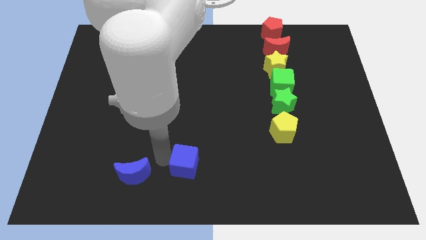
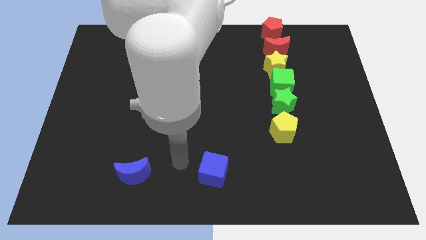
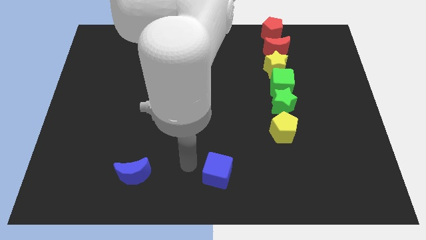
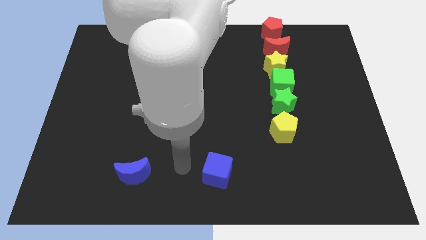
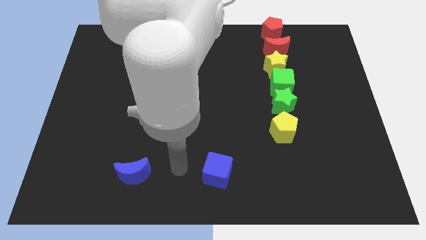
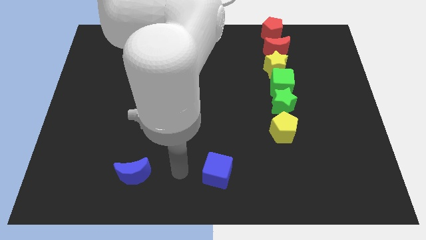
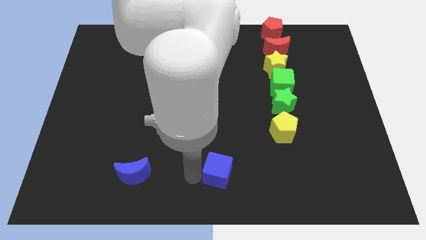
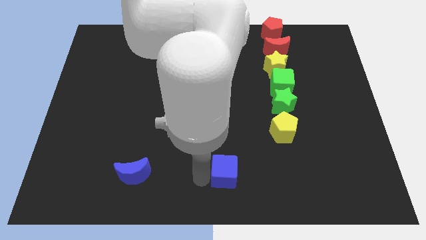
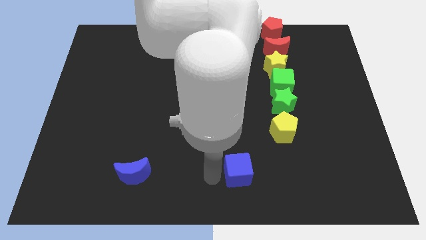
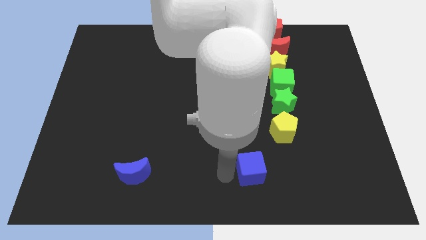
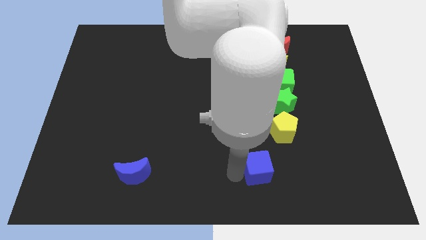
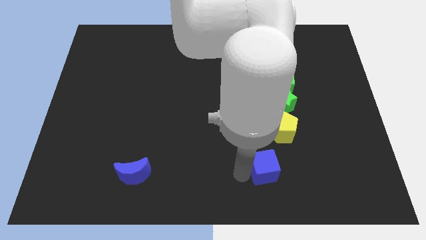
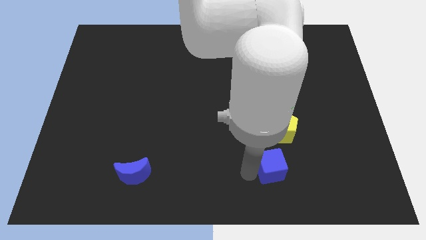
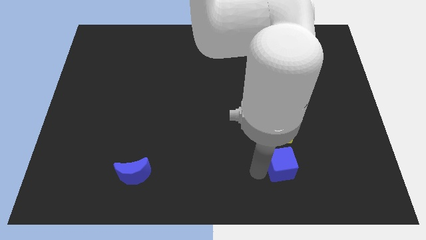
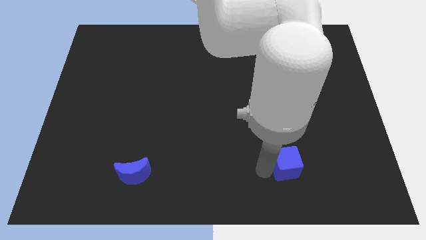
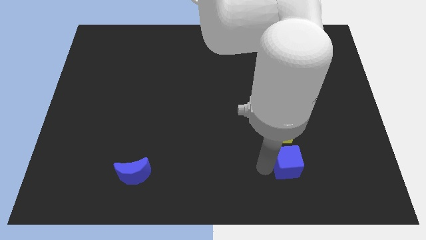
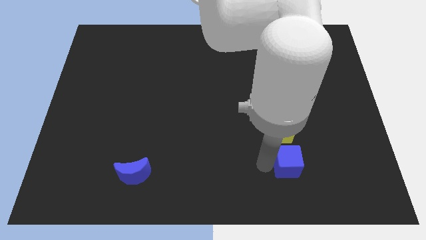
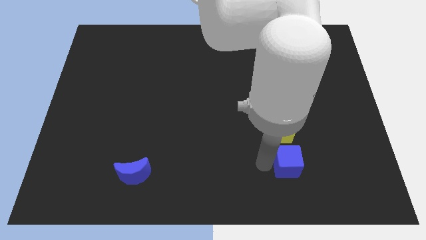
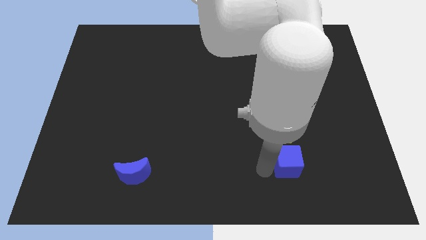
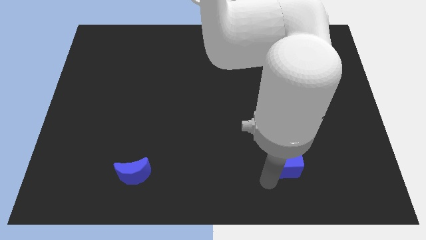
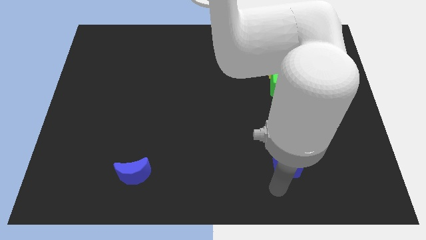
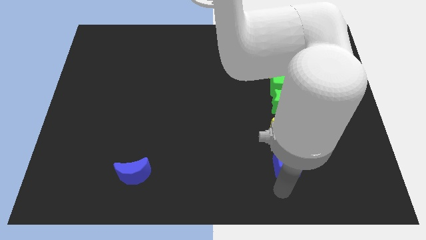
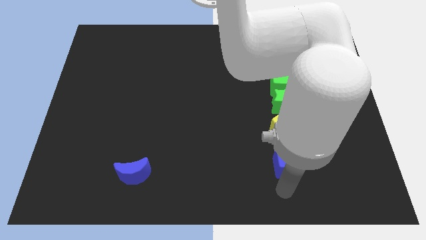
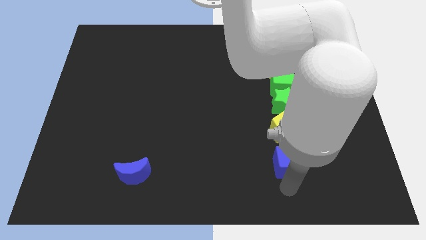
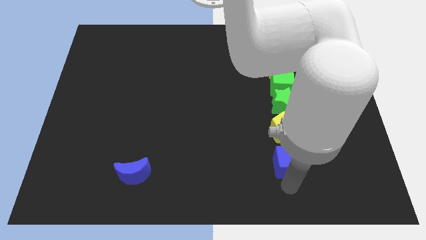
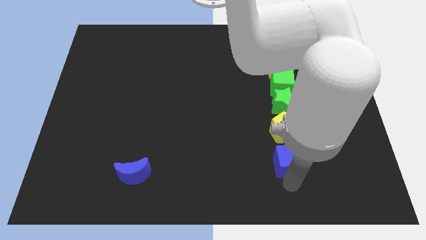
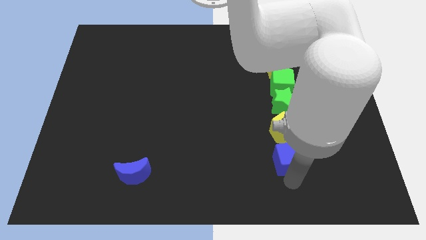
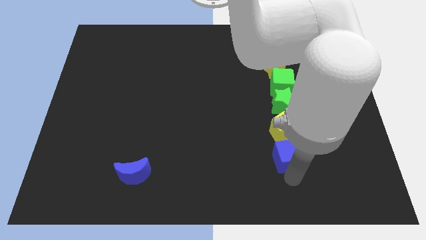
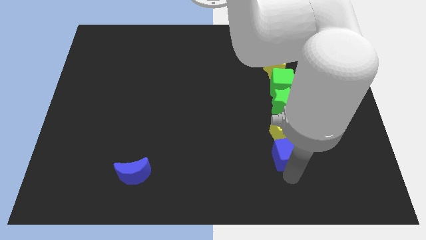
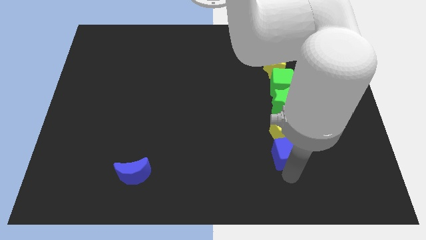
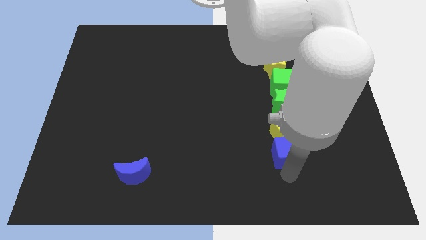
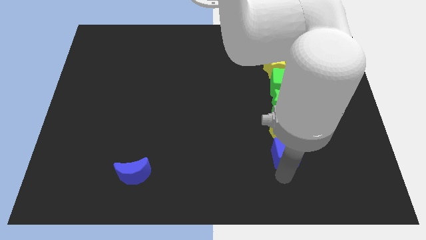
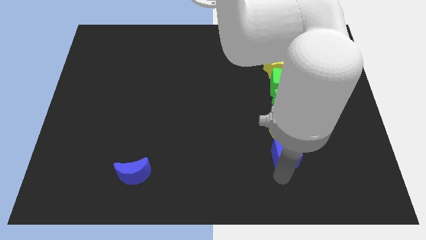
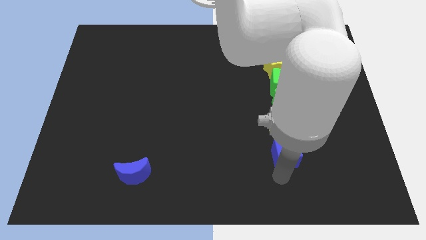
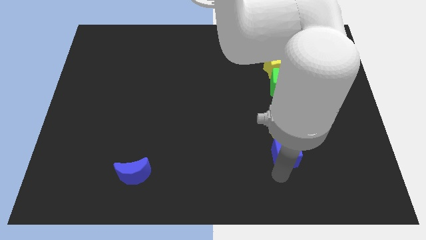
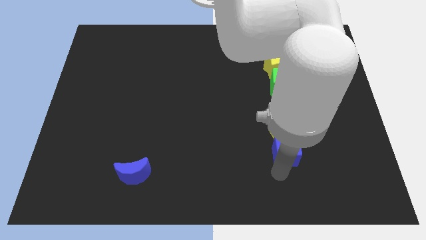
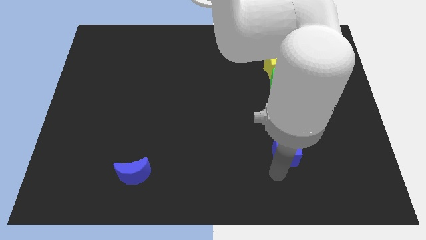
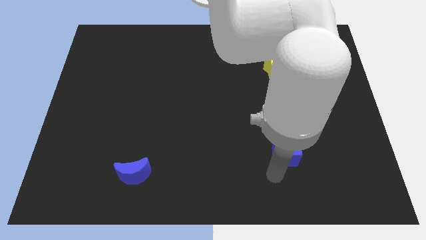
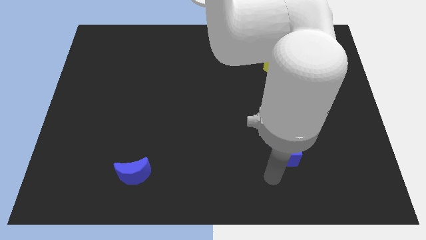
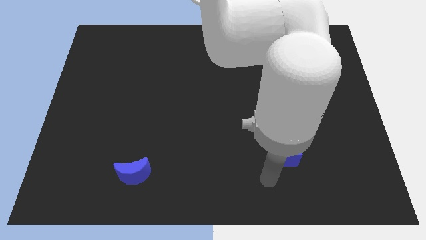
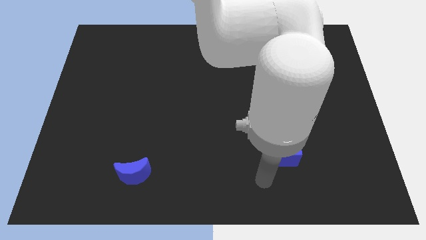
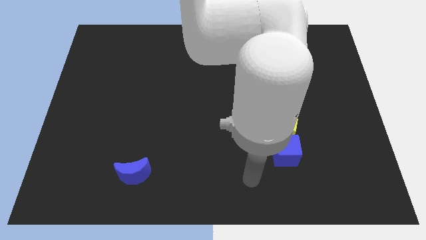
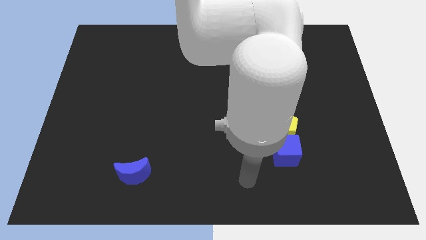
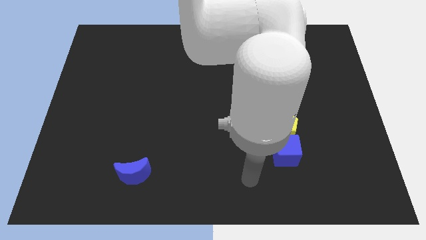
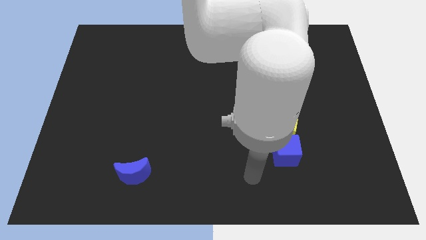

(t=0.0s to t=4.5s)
place blue cube below yellow pentagon

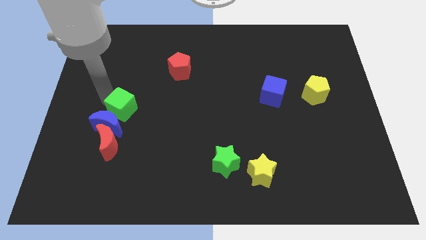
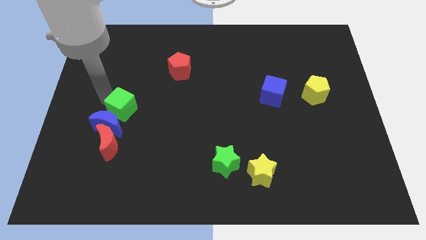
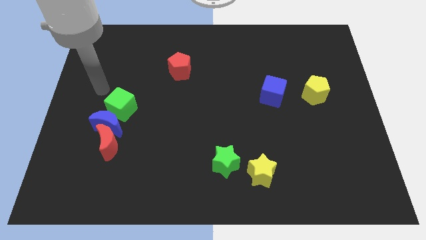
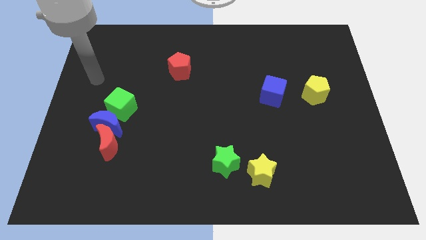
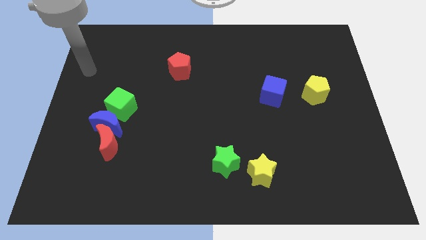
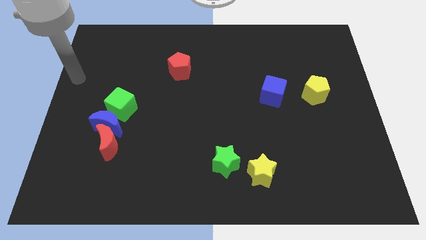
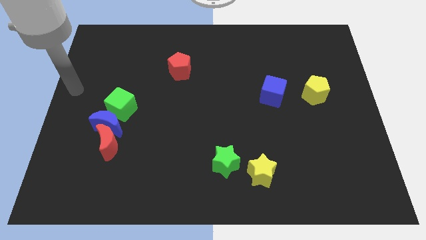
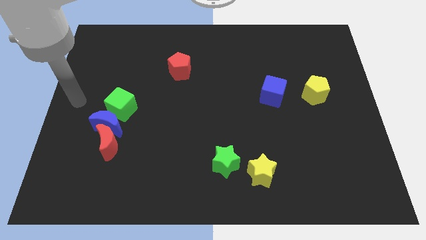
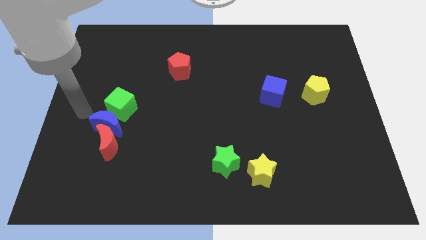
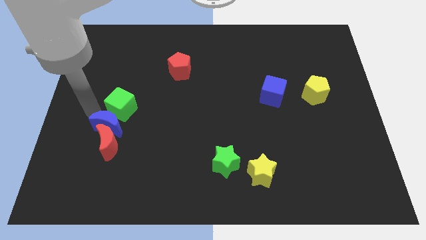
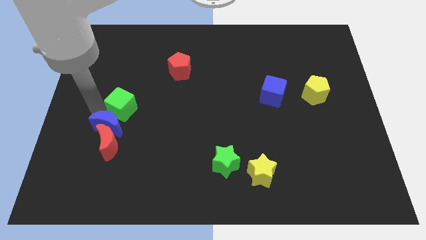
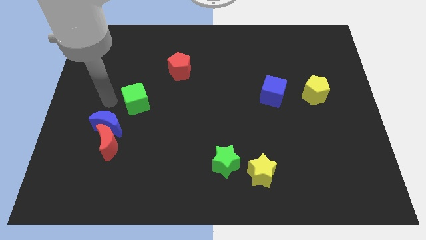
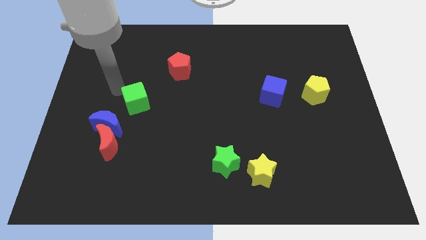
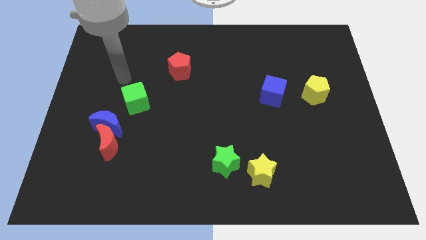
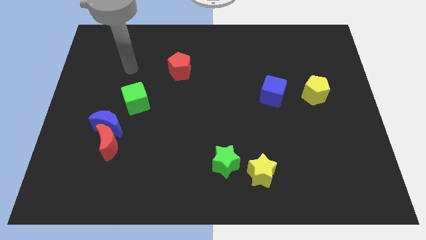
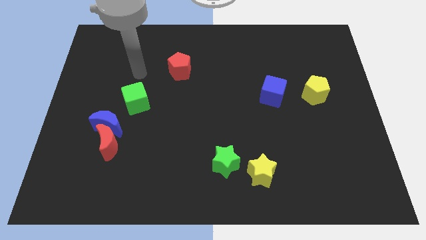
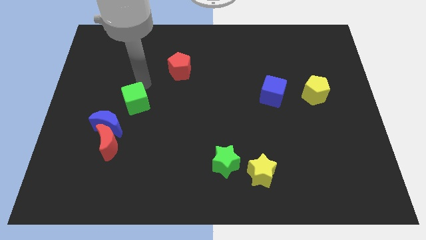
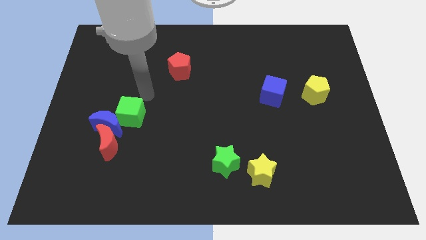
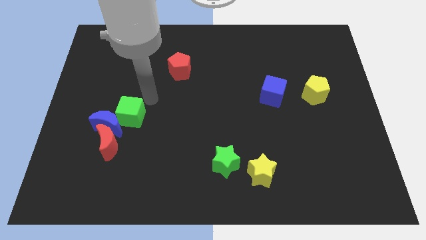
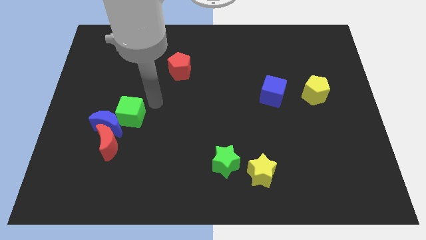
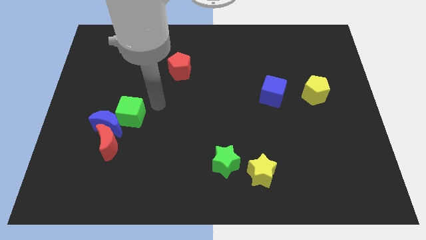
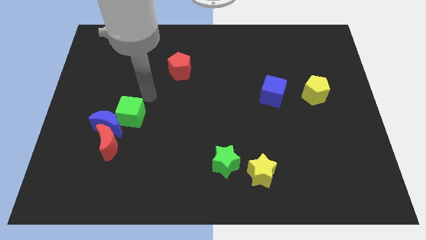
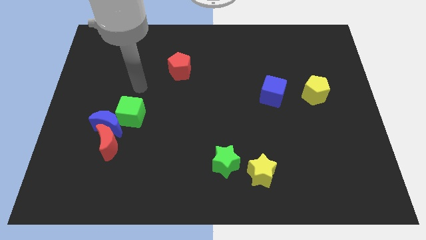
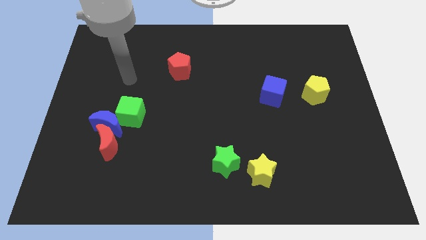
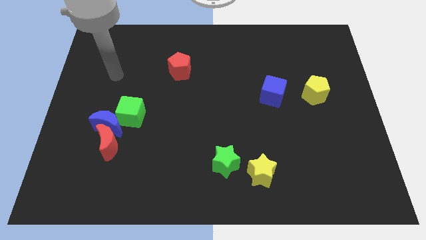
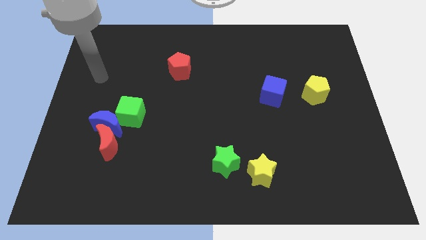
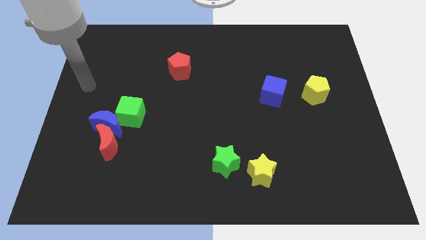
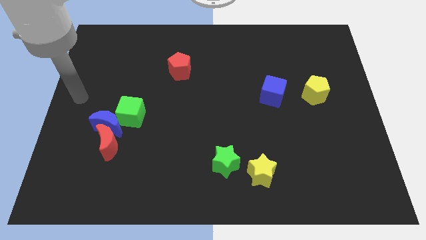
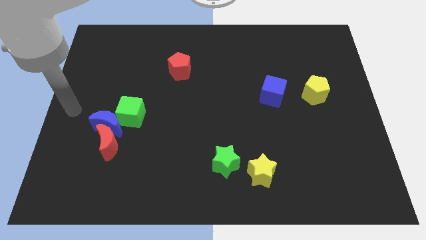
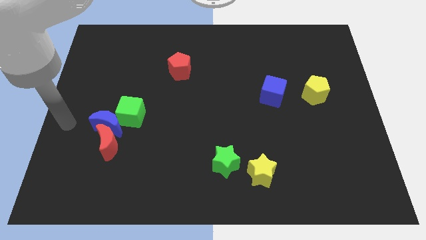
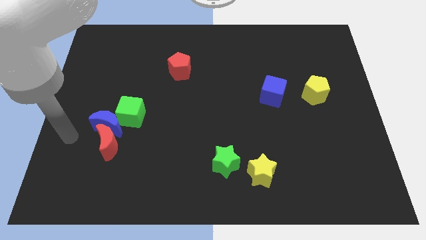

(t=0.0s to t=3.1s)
put the green cube at the top right side of blue moon

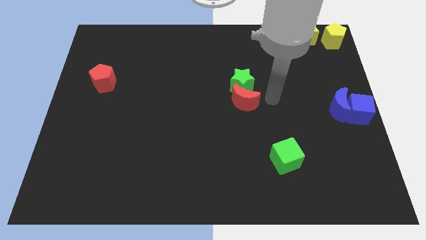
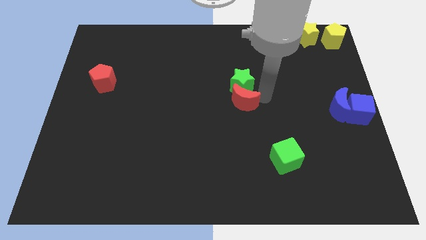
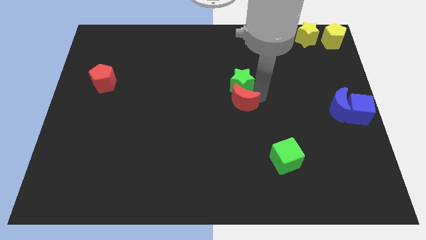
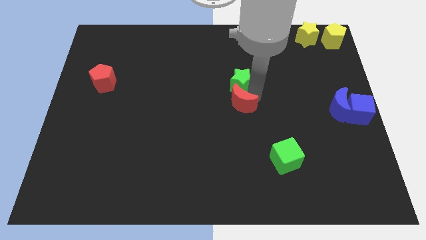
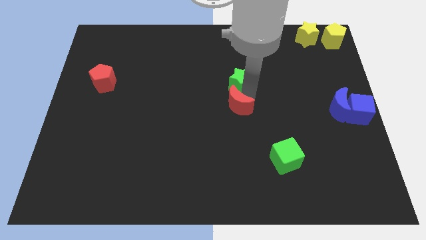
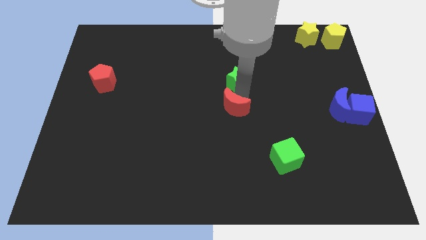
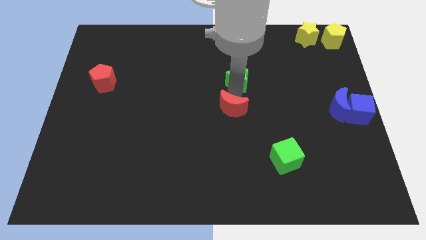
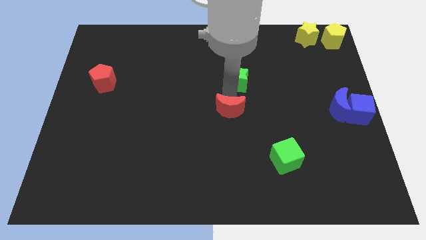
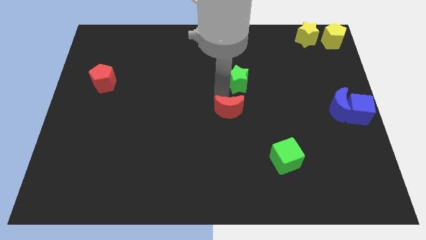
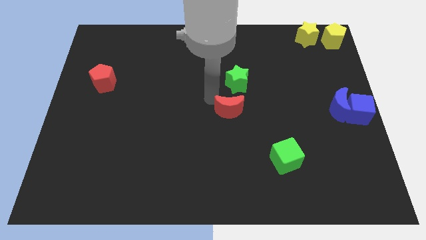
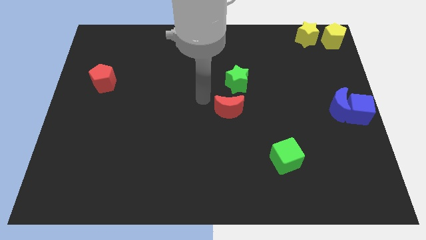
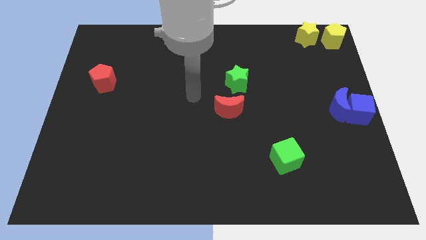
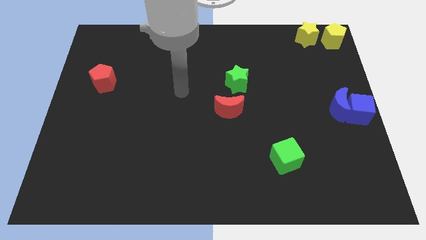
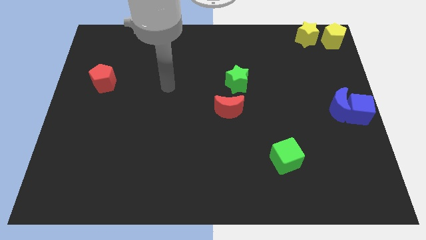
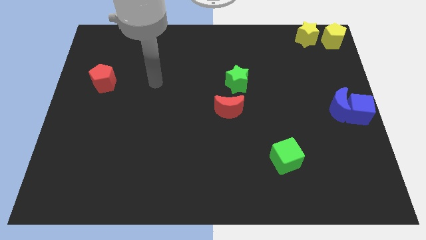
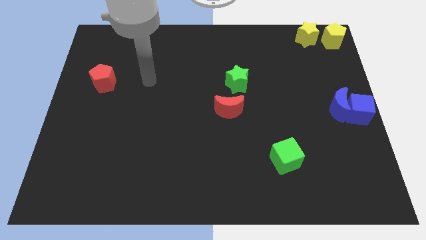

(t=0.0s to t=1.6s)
separate the red moon from the green star
